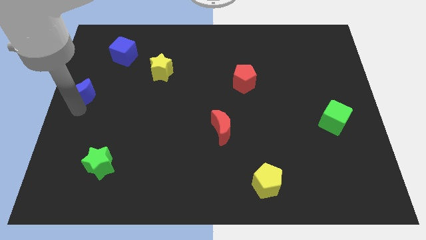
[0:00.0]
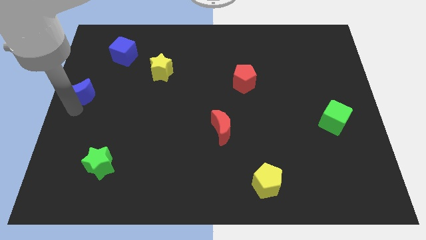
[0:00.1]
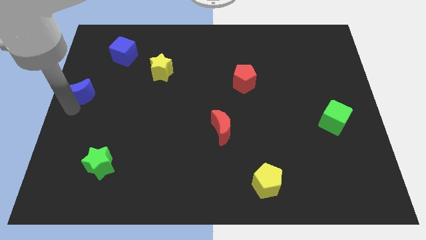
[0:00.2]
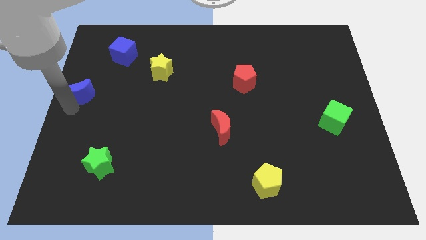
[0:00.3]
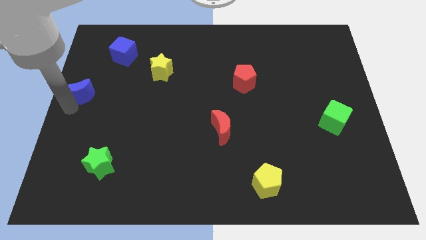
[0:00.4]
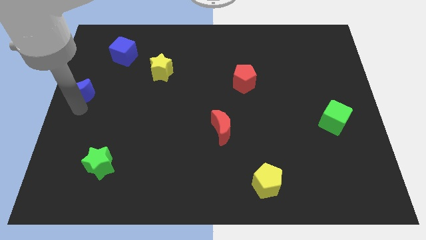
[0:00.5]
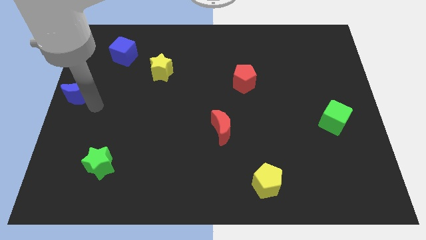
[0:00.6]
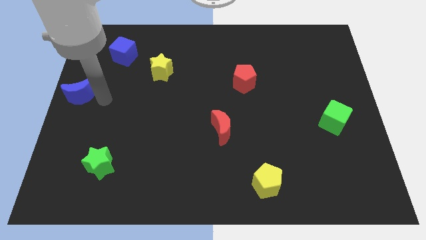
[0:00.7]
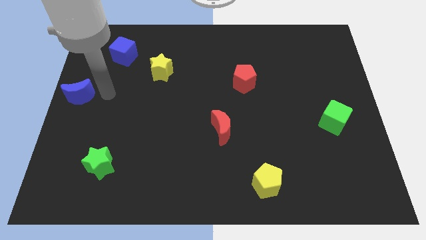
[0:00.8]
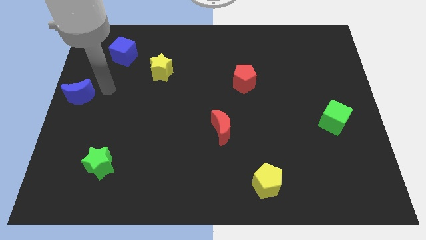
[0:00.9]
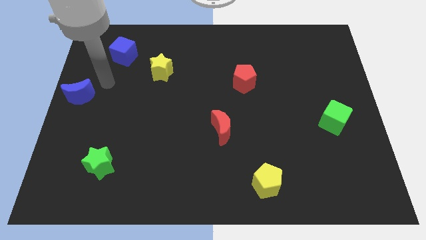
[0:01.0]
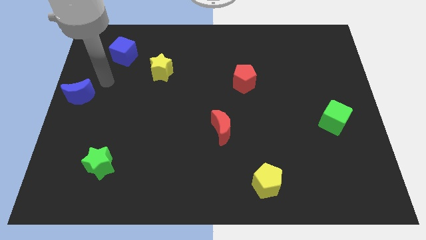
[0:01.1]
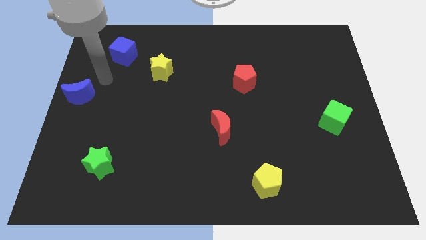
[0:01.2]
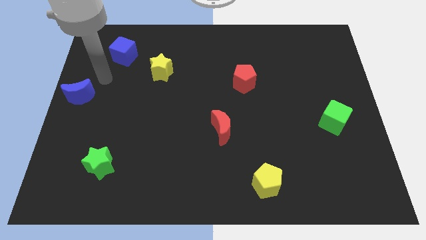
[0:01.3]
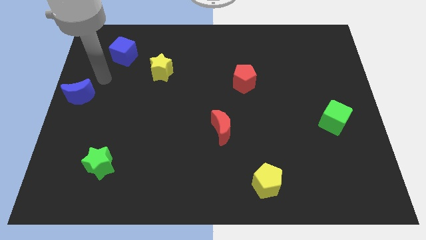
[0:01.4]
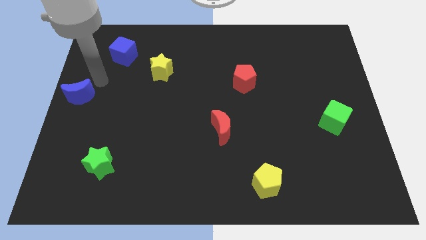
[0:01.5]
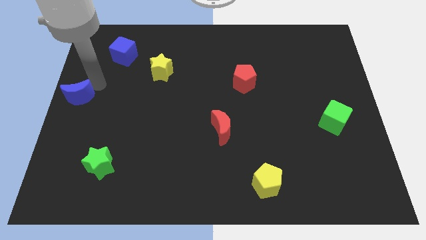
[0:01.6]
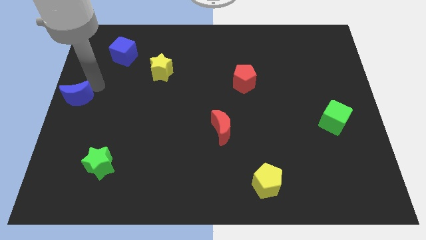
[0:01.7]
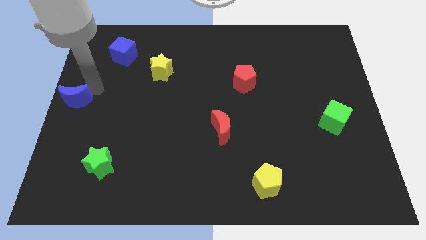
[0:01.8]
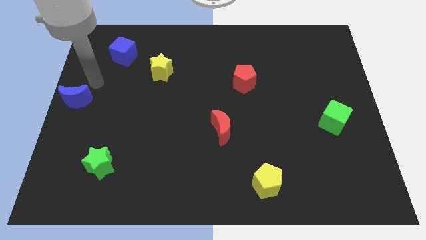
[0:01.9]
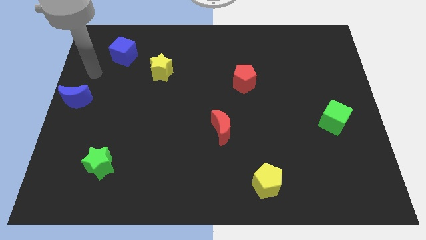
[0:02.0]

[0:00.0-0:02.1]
move the arm in between the blue cube and blue crescent

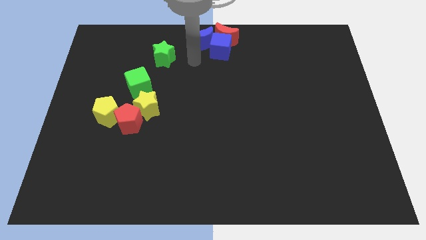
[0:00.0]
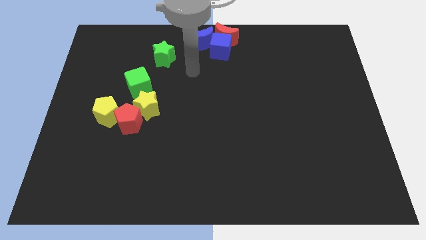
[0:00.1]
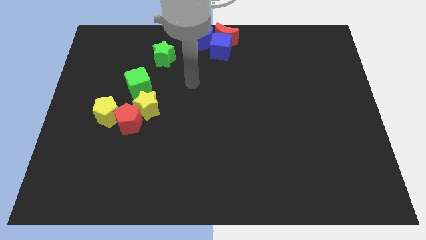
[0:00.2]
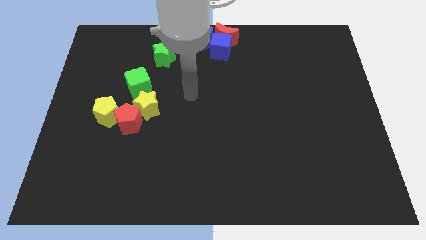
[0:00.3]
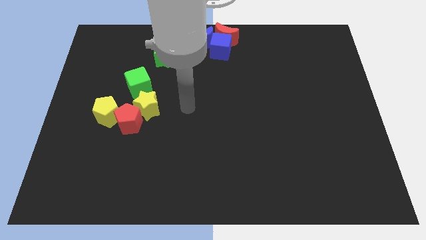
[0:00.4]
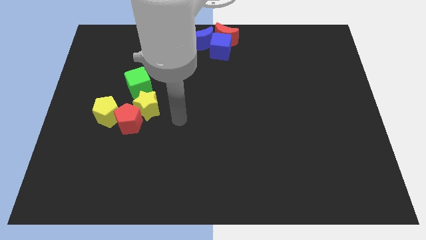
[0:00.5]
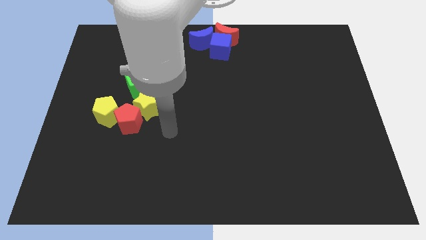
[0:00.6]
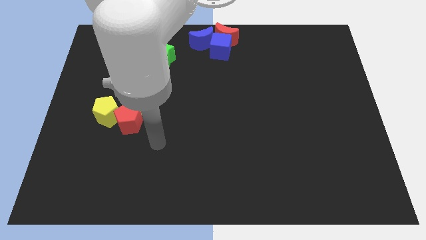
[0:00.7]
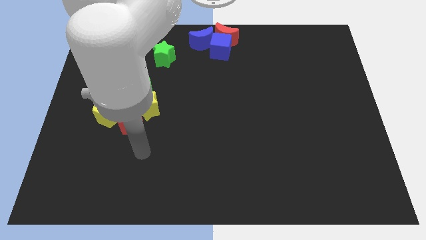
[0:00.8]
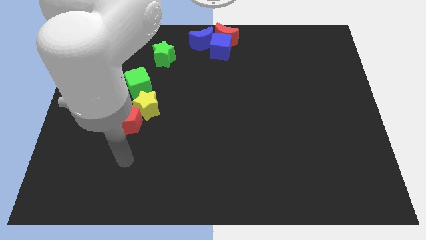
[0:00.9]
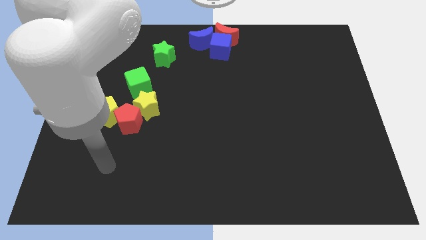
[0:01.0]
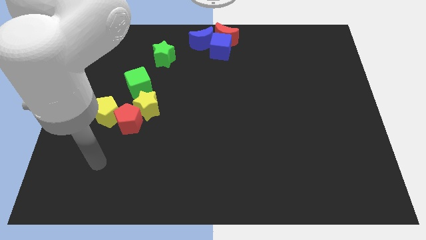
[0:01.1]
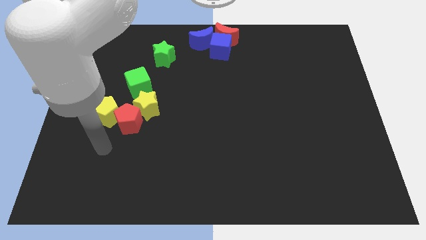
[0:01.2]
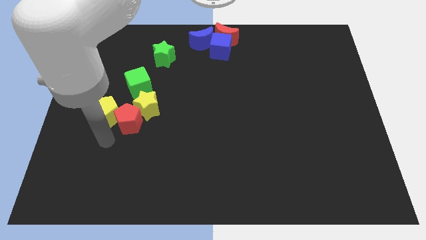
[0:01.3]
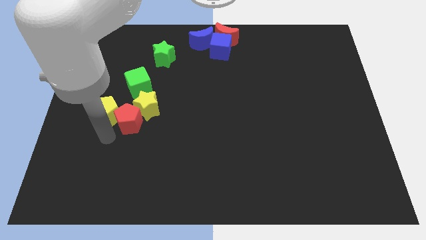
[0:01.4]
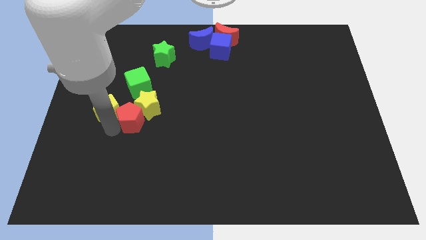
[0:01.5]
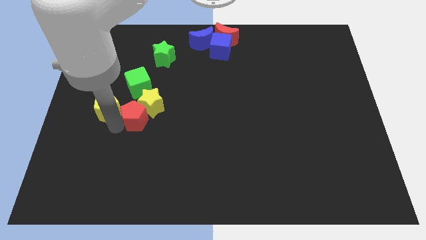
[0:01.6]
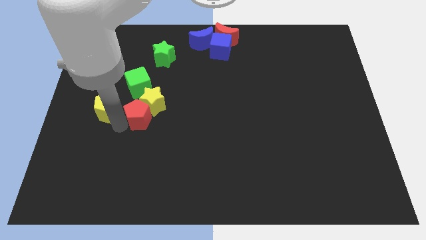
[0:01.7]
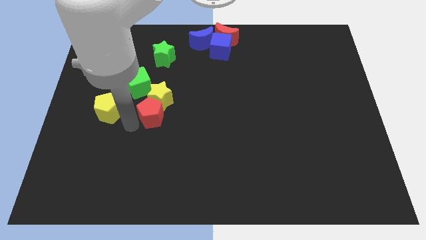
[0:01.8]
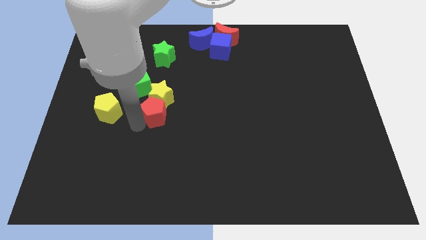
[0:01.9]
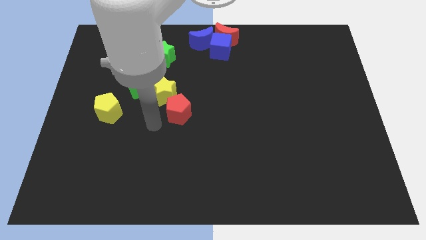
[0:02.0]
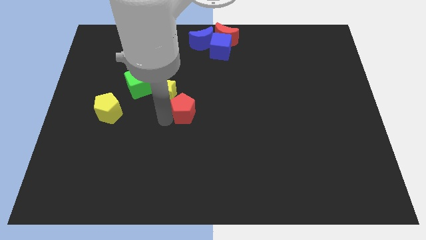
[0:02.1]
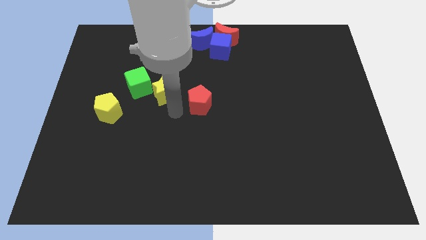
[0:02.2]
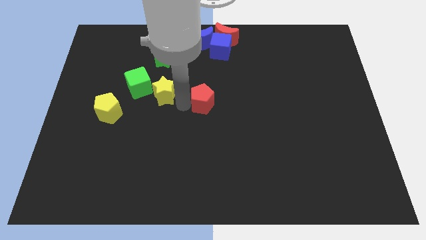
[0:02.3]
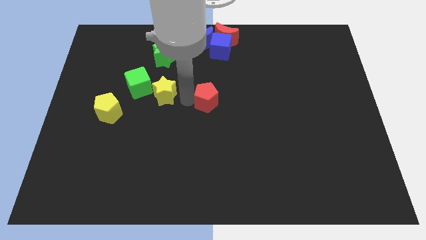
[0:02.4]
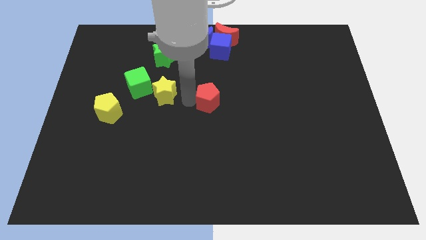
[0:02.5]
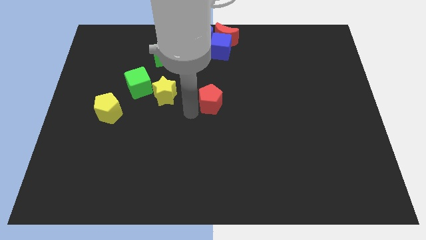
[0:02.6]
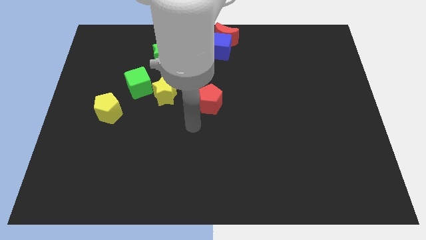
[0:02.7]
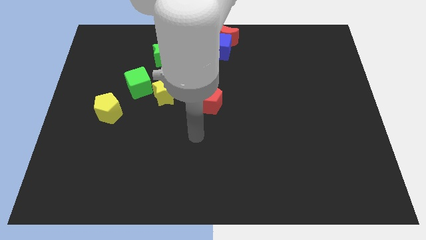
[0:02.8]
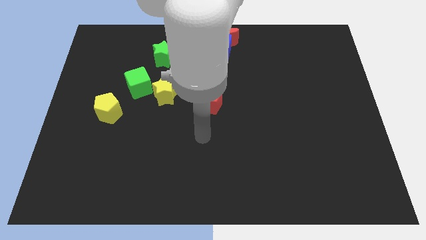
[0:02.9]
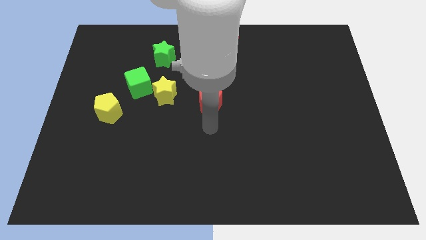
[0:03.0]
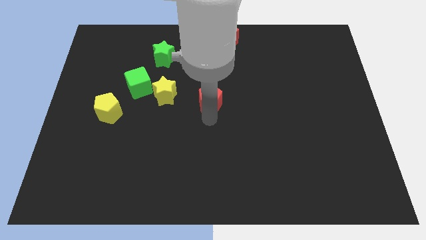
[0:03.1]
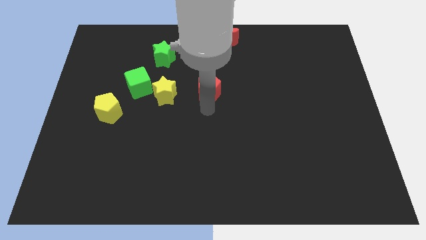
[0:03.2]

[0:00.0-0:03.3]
separate the red pentagon from the group of blocks

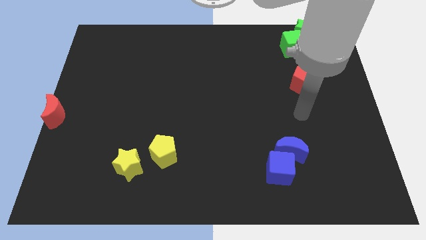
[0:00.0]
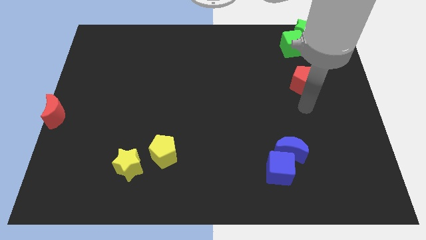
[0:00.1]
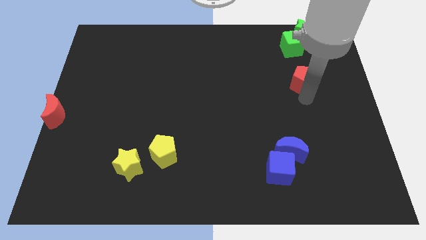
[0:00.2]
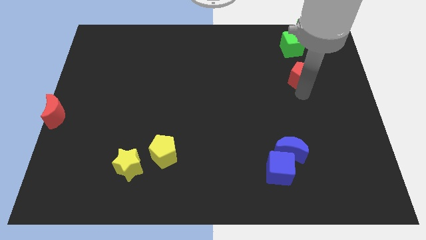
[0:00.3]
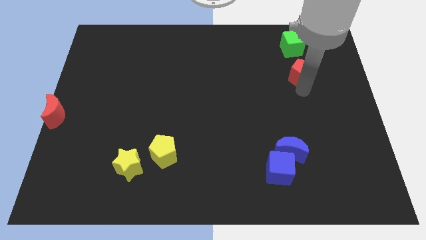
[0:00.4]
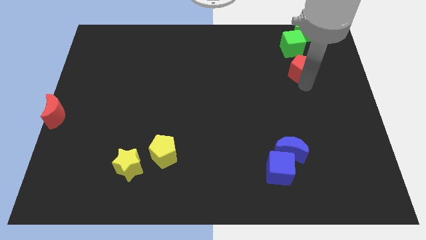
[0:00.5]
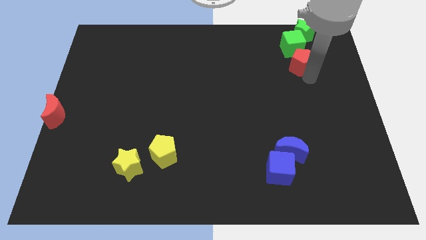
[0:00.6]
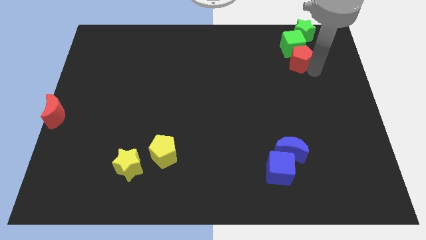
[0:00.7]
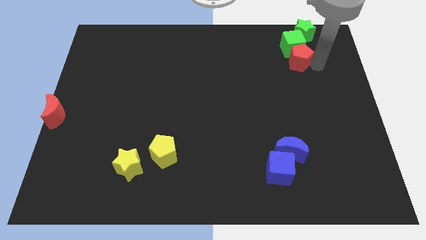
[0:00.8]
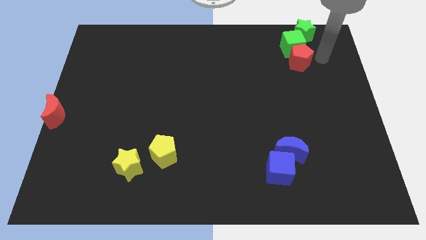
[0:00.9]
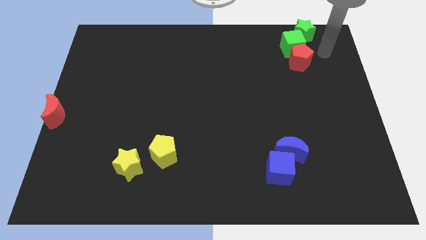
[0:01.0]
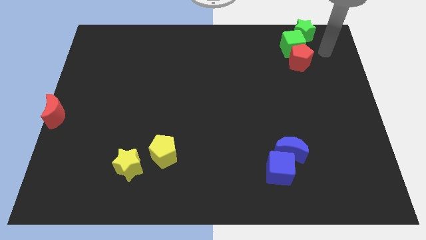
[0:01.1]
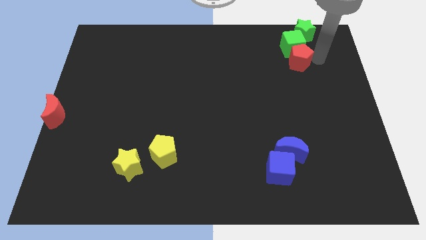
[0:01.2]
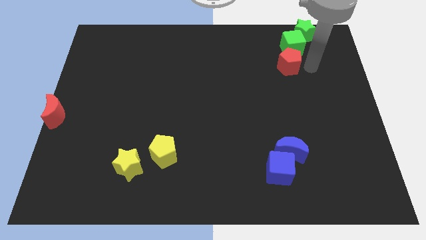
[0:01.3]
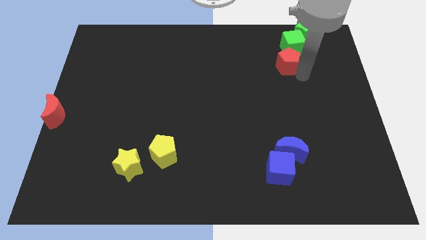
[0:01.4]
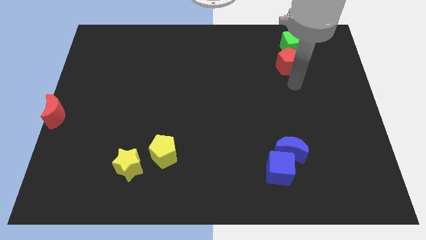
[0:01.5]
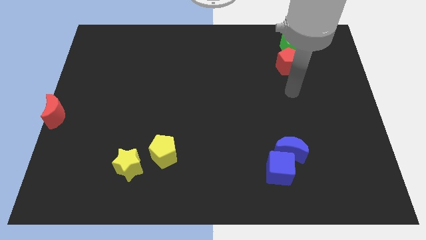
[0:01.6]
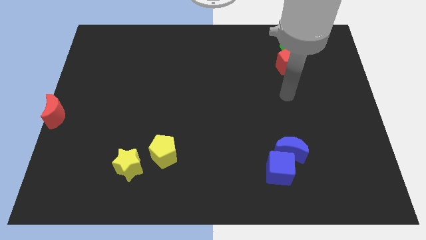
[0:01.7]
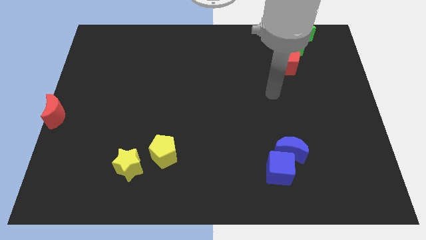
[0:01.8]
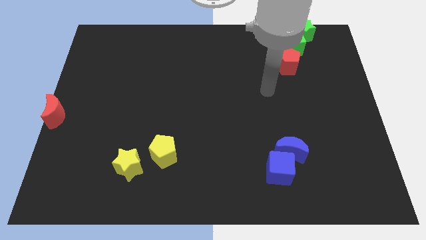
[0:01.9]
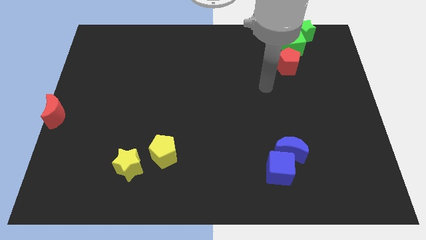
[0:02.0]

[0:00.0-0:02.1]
move the red pentagon into the green cube

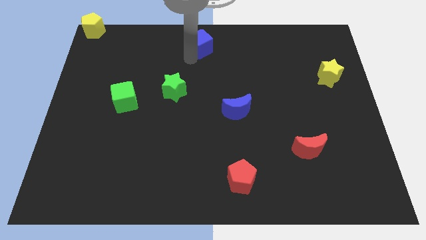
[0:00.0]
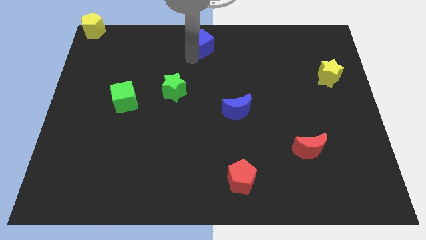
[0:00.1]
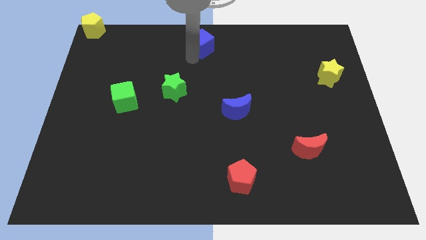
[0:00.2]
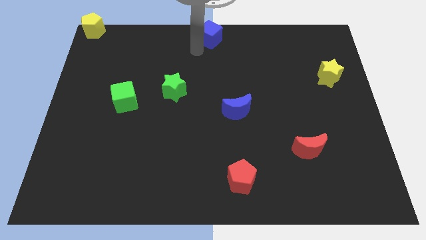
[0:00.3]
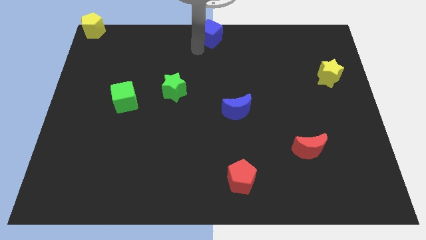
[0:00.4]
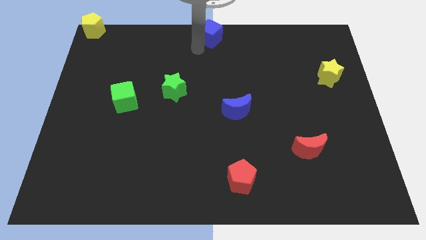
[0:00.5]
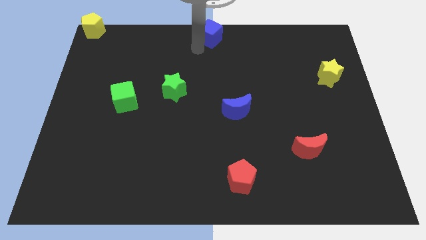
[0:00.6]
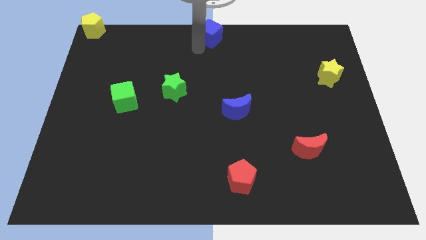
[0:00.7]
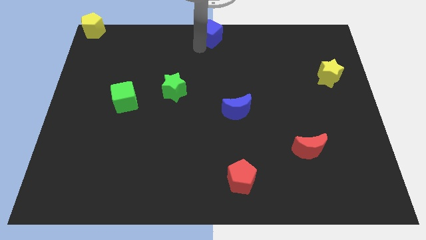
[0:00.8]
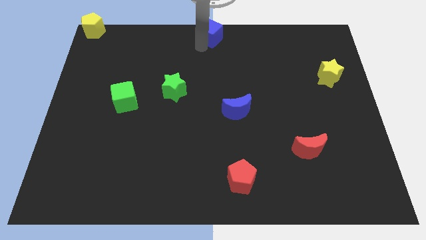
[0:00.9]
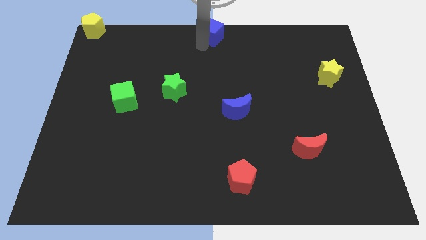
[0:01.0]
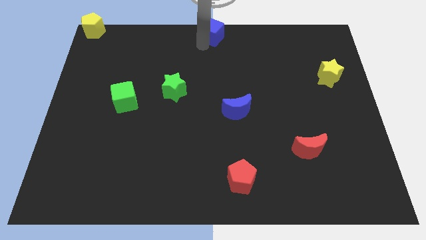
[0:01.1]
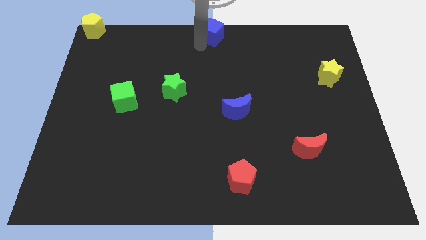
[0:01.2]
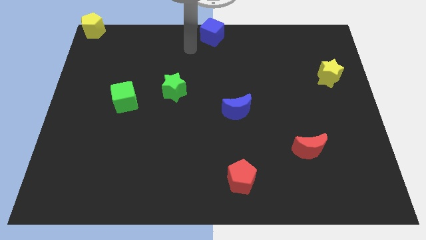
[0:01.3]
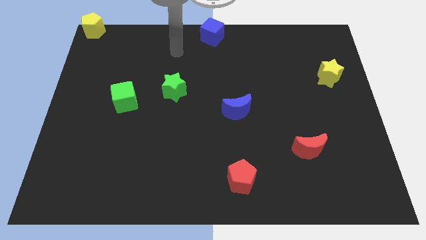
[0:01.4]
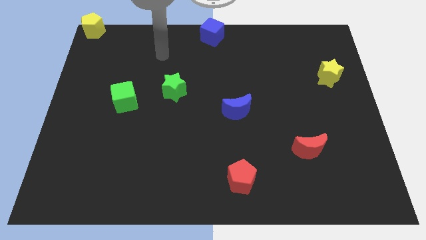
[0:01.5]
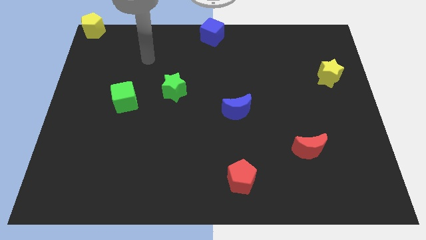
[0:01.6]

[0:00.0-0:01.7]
place the blue cube at the top center of the board
